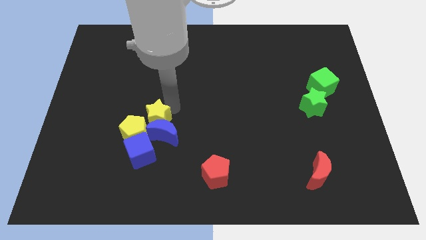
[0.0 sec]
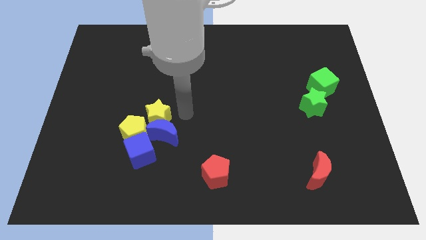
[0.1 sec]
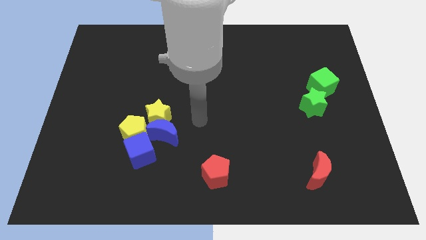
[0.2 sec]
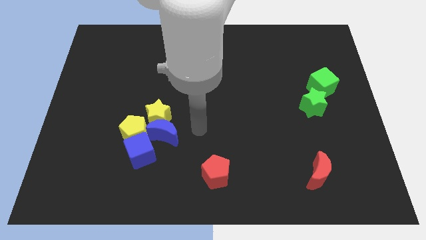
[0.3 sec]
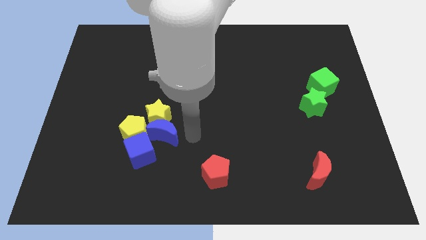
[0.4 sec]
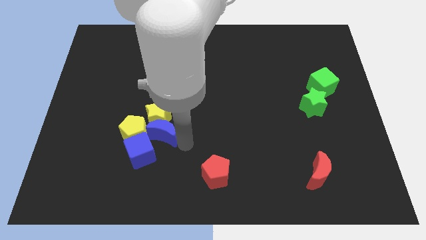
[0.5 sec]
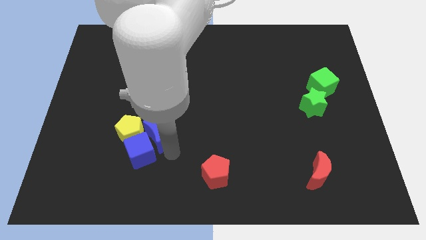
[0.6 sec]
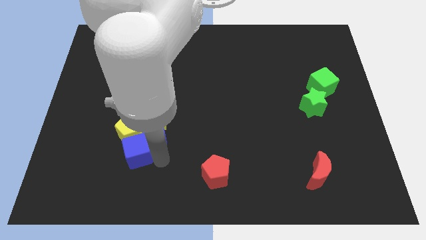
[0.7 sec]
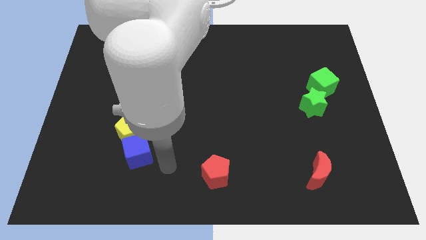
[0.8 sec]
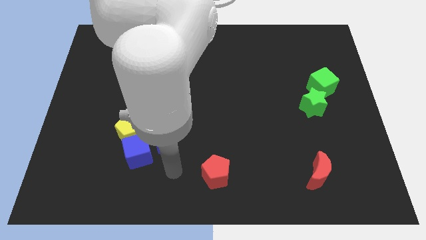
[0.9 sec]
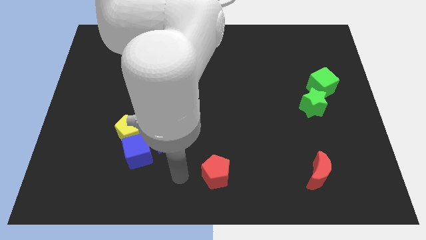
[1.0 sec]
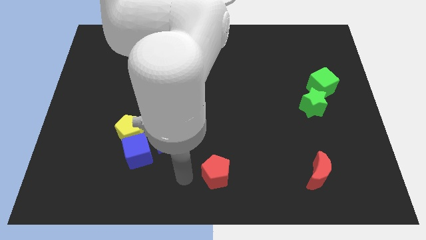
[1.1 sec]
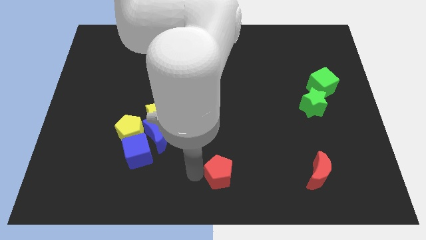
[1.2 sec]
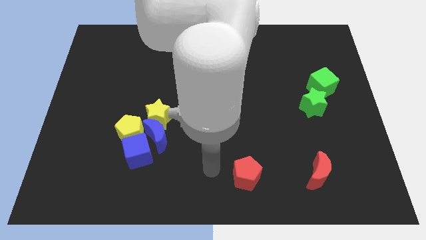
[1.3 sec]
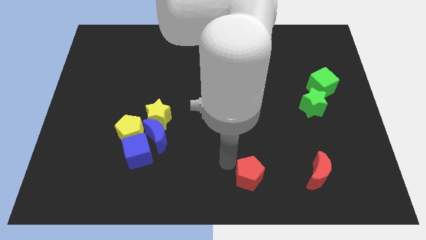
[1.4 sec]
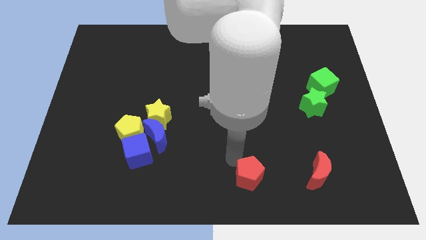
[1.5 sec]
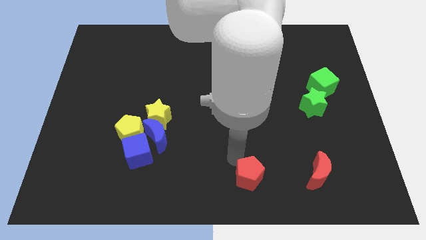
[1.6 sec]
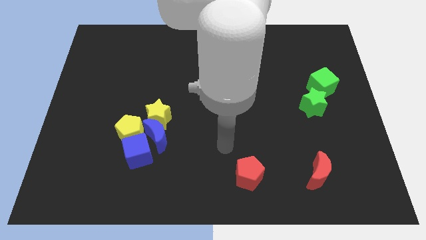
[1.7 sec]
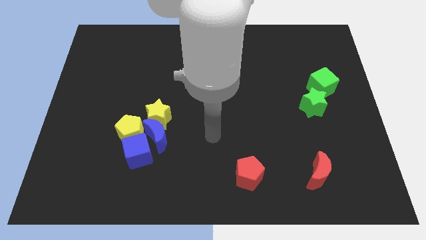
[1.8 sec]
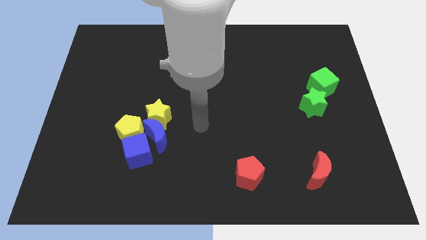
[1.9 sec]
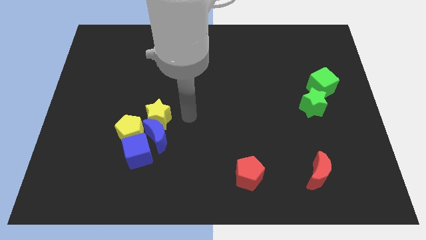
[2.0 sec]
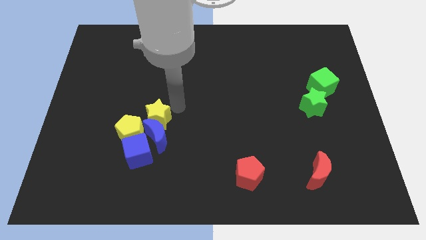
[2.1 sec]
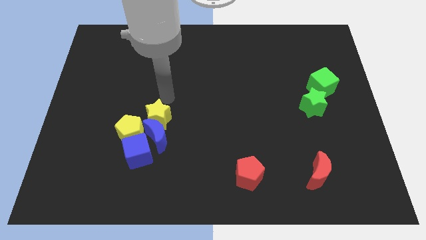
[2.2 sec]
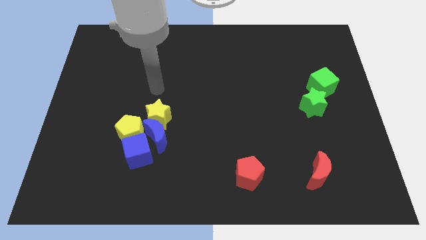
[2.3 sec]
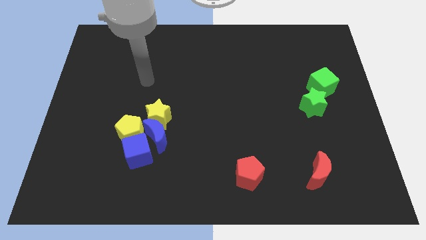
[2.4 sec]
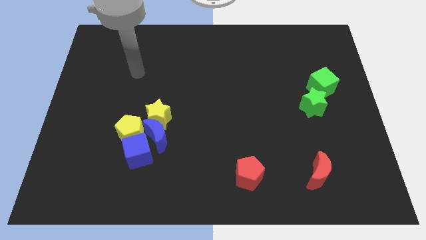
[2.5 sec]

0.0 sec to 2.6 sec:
move the red pentagon slightly to the right

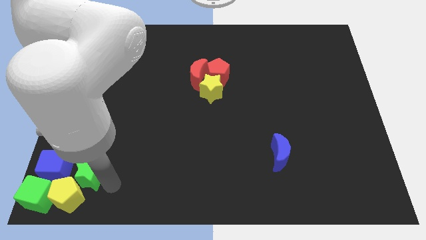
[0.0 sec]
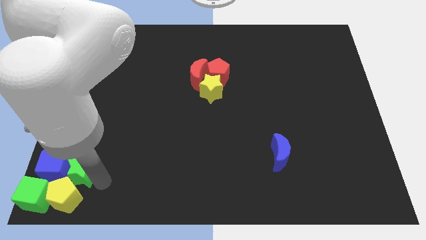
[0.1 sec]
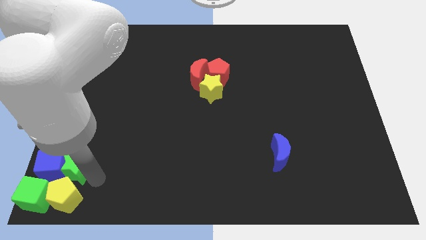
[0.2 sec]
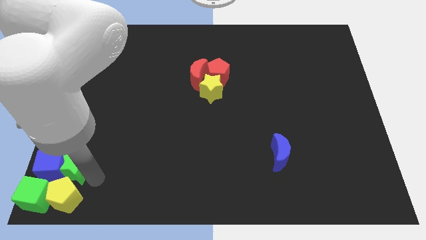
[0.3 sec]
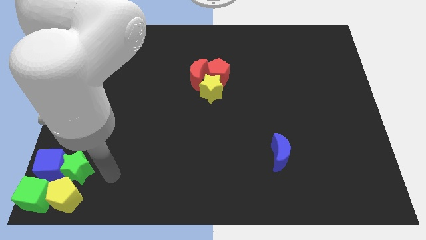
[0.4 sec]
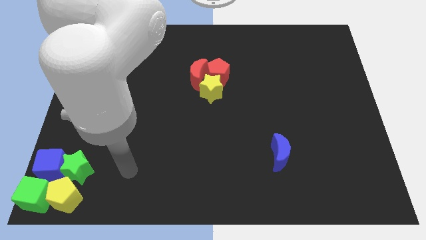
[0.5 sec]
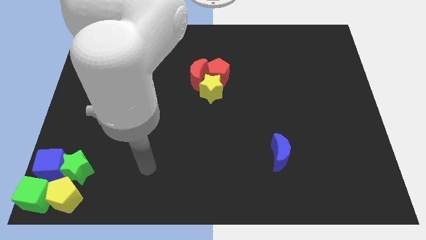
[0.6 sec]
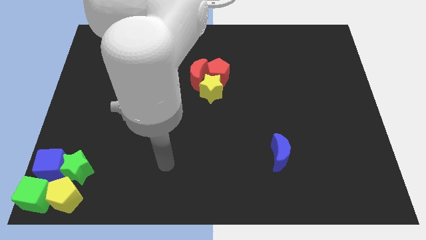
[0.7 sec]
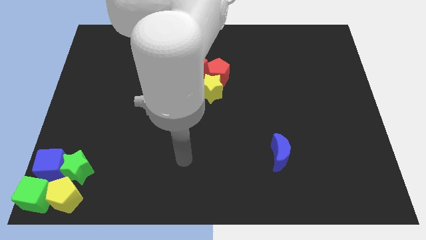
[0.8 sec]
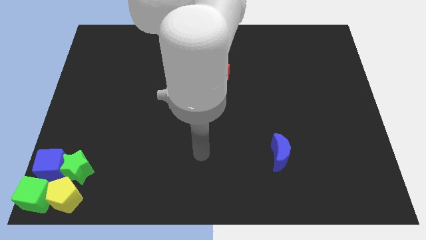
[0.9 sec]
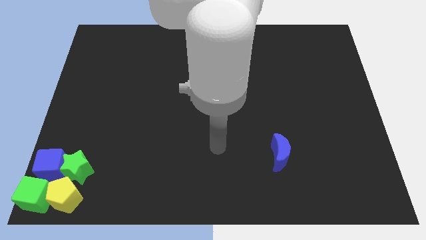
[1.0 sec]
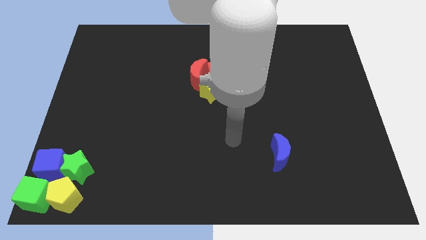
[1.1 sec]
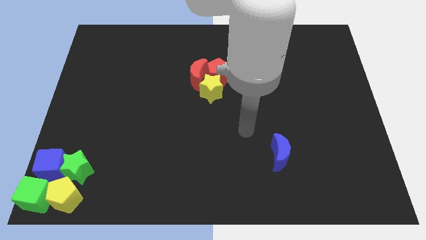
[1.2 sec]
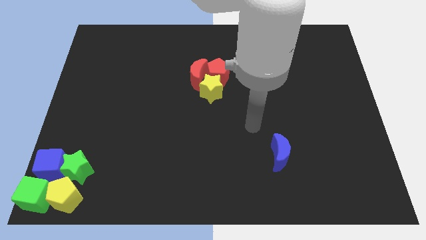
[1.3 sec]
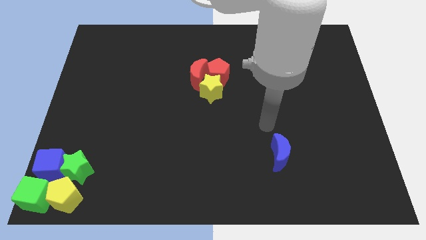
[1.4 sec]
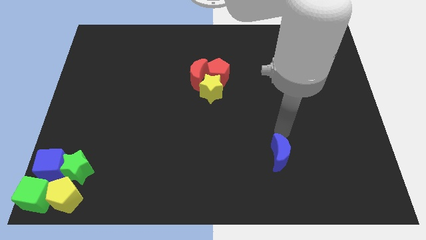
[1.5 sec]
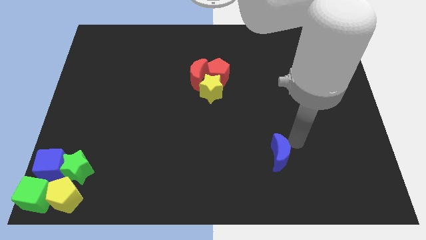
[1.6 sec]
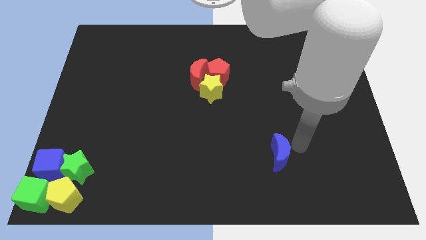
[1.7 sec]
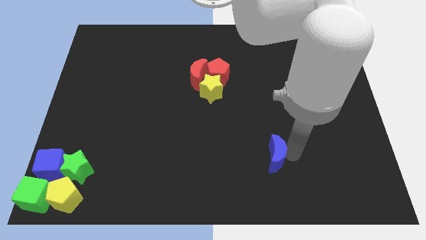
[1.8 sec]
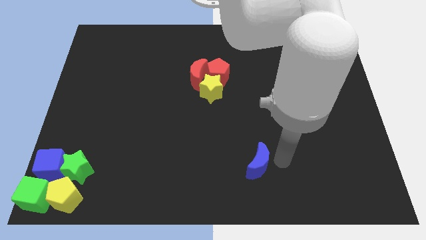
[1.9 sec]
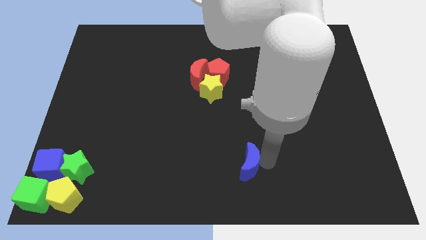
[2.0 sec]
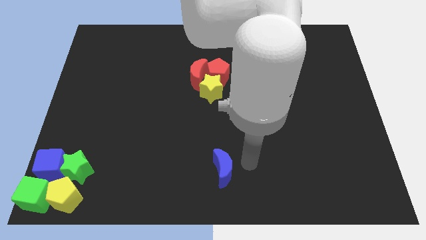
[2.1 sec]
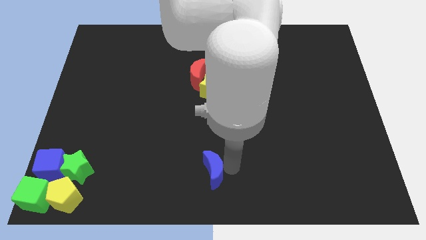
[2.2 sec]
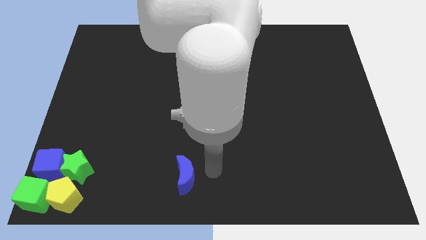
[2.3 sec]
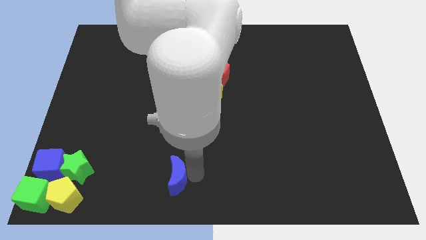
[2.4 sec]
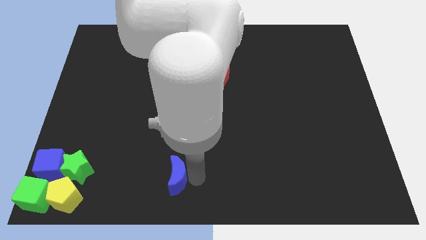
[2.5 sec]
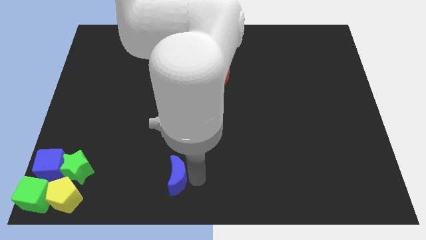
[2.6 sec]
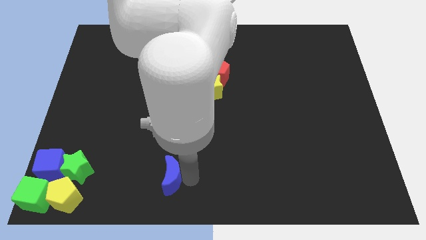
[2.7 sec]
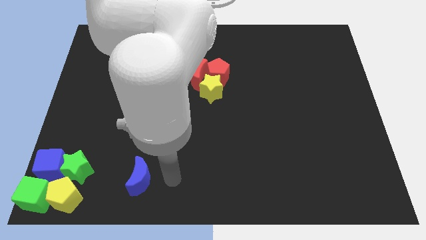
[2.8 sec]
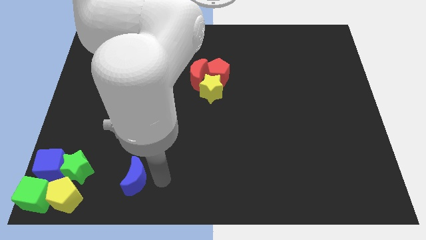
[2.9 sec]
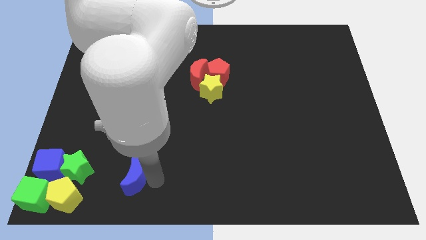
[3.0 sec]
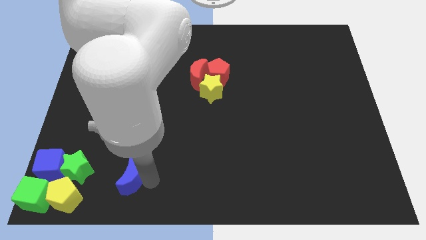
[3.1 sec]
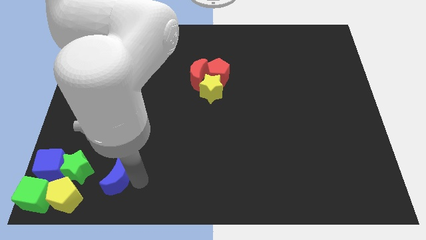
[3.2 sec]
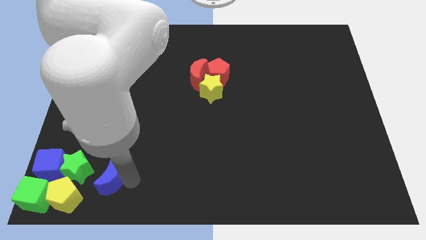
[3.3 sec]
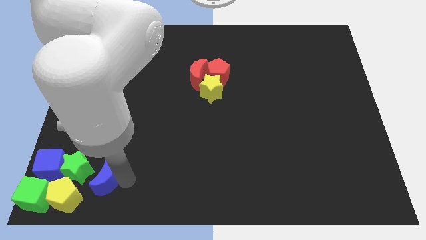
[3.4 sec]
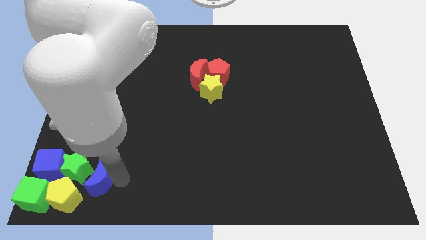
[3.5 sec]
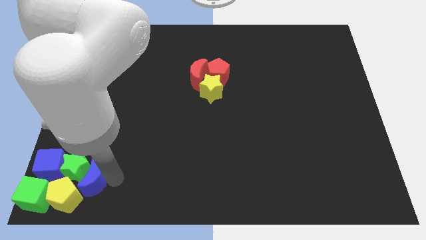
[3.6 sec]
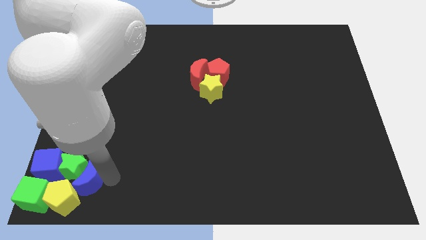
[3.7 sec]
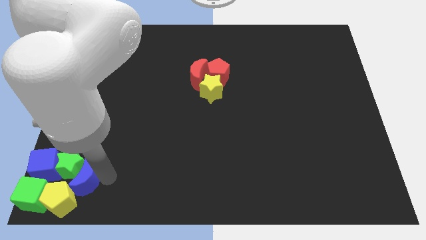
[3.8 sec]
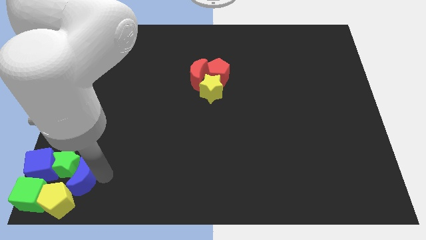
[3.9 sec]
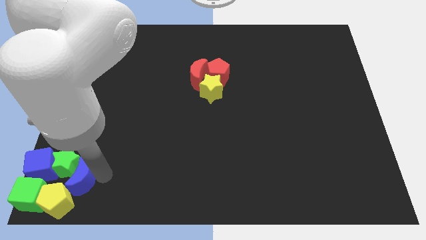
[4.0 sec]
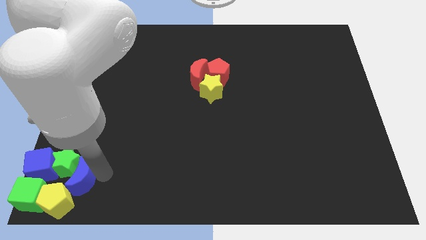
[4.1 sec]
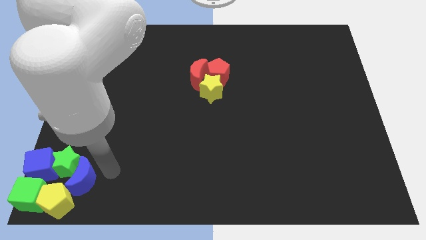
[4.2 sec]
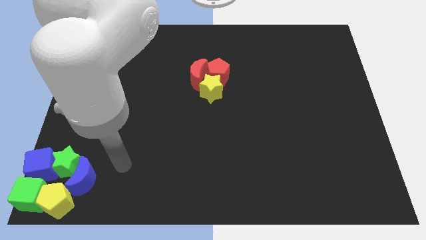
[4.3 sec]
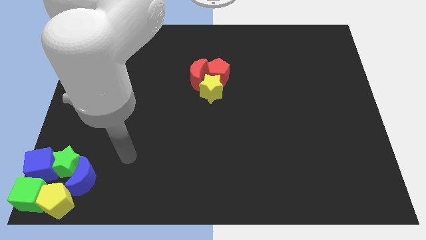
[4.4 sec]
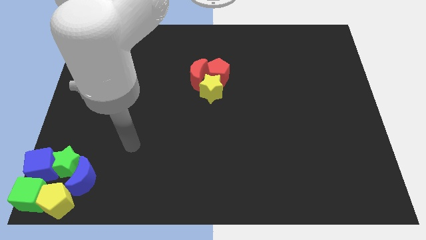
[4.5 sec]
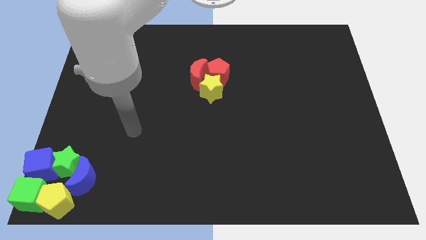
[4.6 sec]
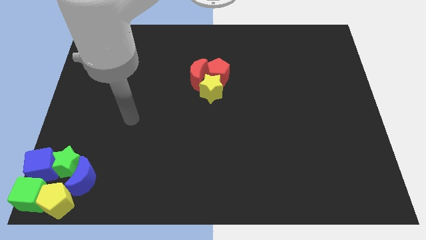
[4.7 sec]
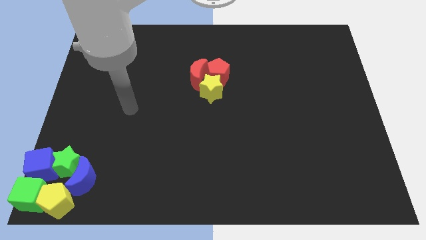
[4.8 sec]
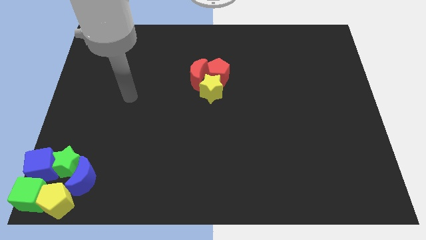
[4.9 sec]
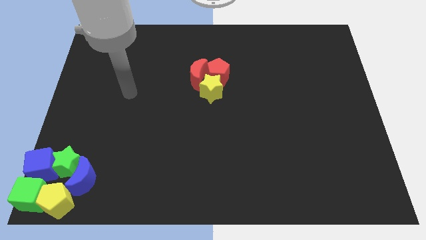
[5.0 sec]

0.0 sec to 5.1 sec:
slide the blue moon into the green star

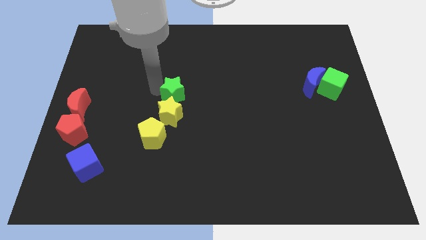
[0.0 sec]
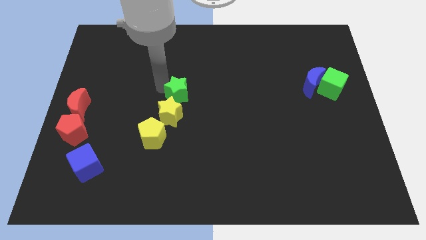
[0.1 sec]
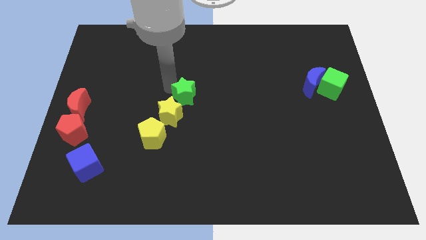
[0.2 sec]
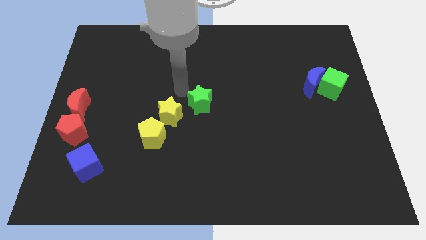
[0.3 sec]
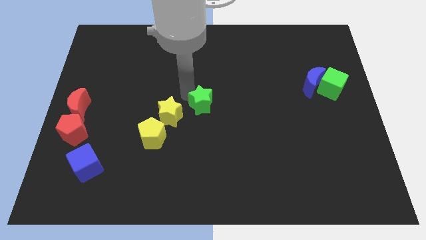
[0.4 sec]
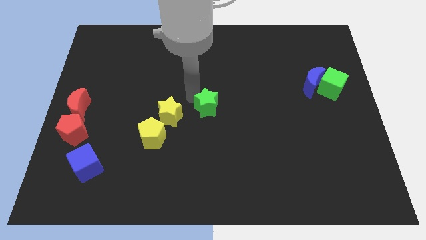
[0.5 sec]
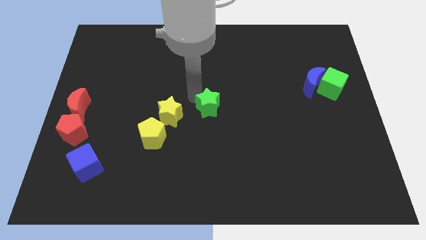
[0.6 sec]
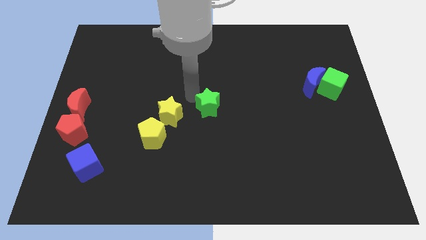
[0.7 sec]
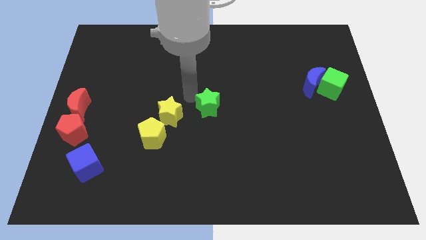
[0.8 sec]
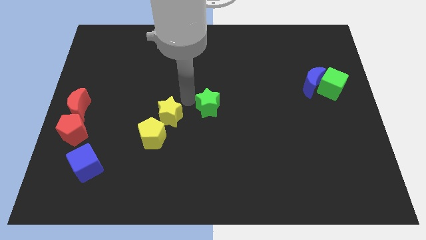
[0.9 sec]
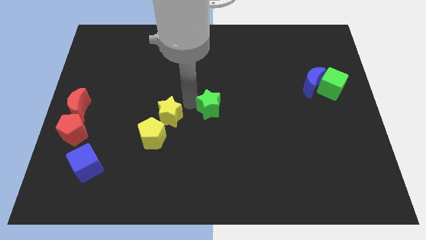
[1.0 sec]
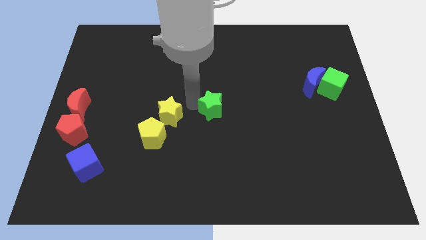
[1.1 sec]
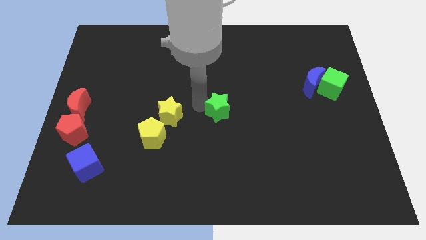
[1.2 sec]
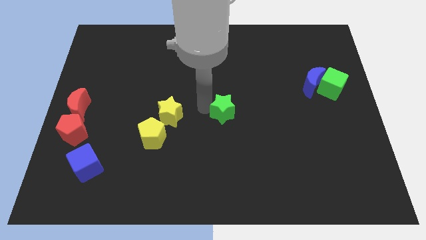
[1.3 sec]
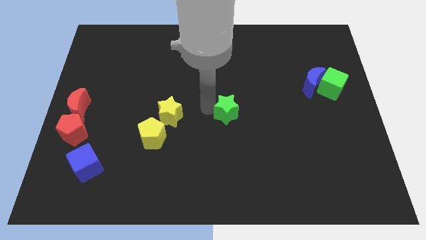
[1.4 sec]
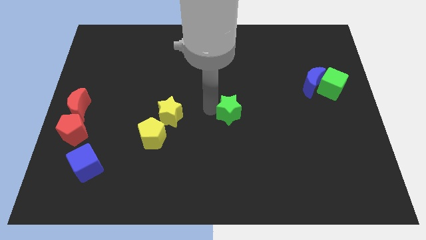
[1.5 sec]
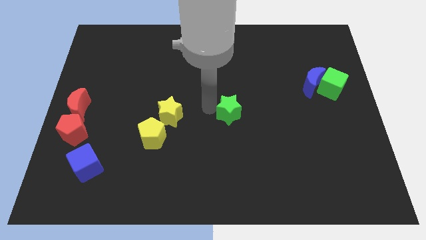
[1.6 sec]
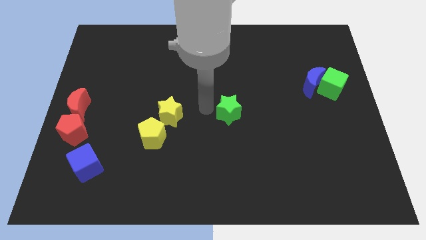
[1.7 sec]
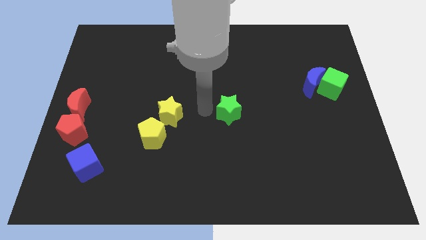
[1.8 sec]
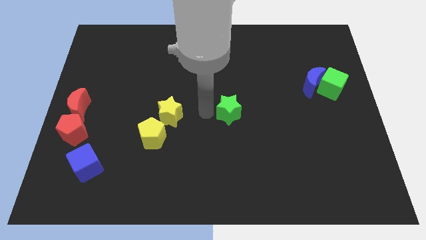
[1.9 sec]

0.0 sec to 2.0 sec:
separate the green star from the yellow blocks
